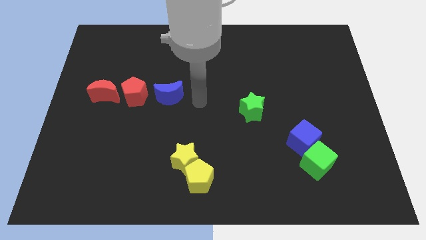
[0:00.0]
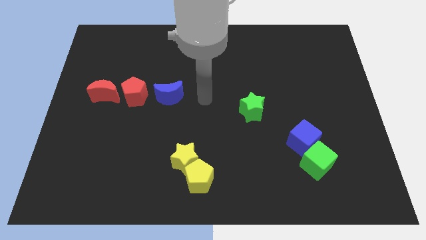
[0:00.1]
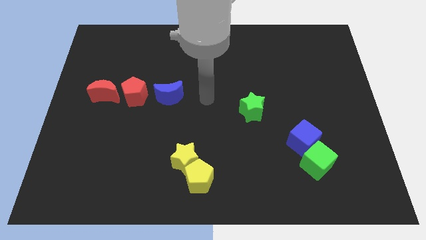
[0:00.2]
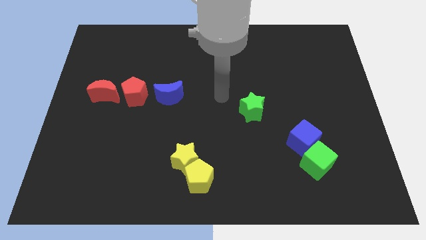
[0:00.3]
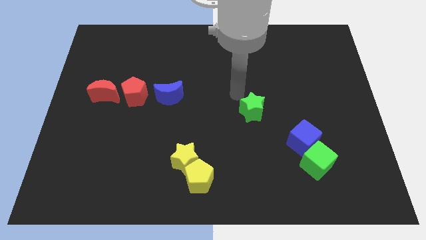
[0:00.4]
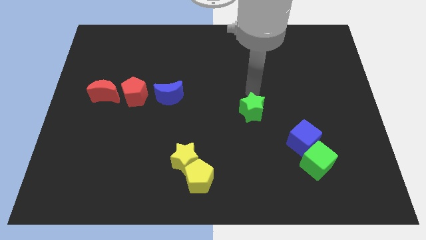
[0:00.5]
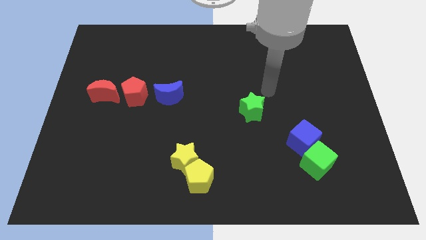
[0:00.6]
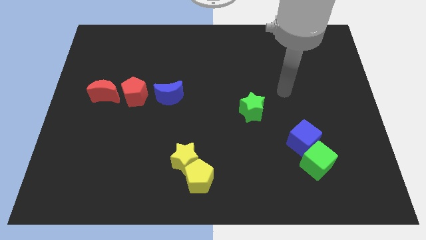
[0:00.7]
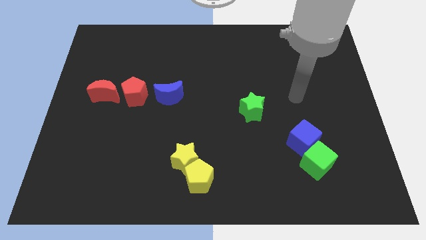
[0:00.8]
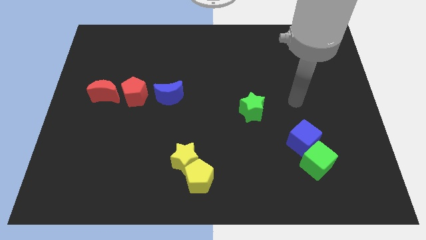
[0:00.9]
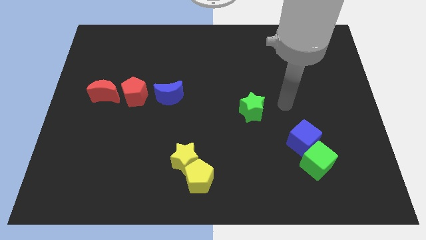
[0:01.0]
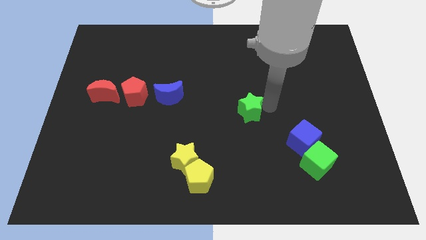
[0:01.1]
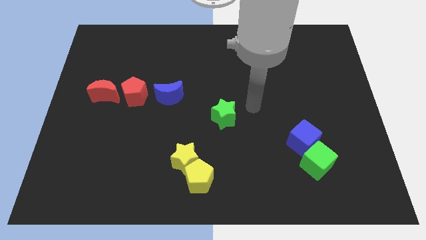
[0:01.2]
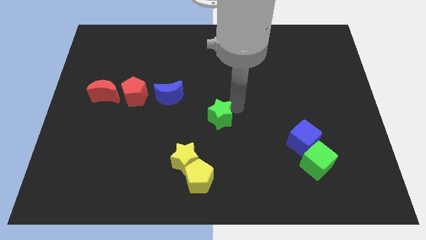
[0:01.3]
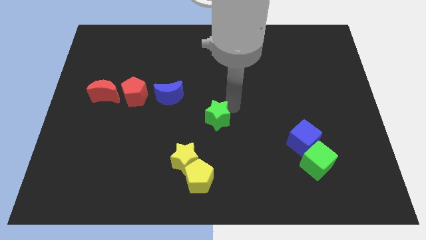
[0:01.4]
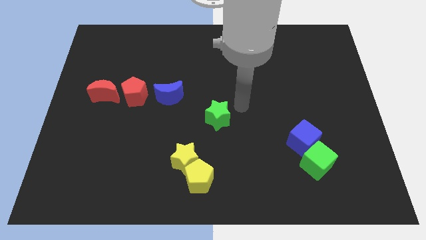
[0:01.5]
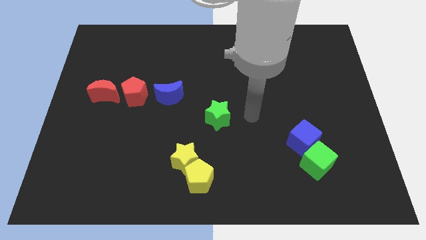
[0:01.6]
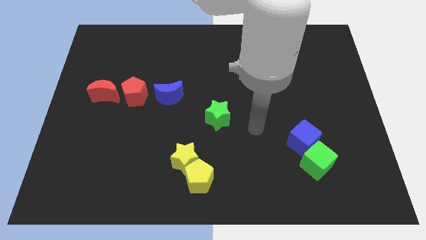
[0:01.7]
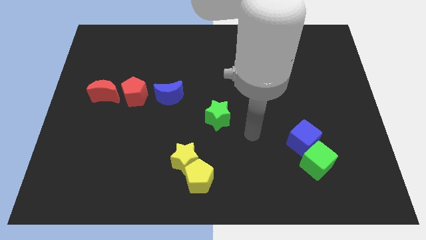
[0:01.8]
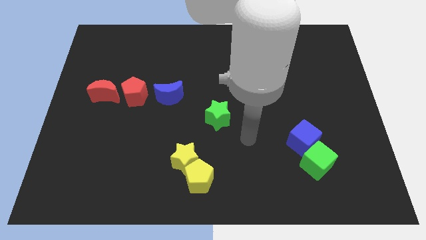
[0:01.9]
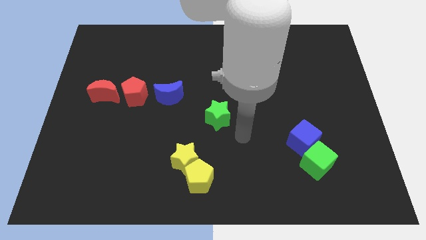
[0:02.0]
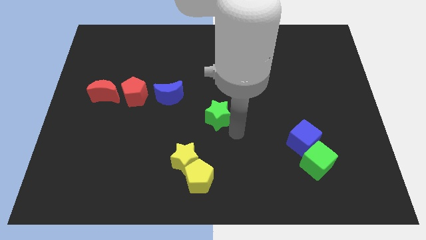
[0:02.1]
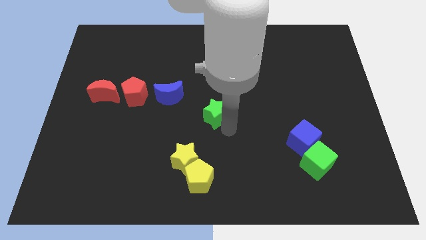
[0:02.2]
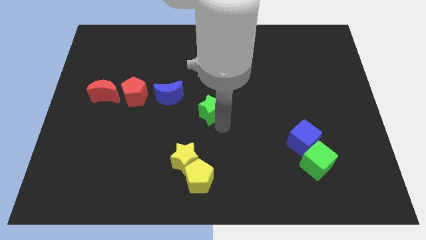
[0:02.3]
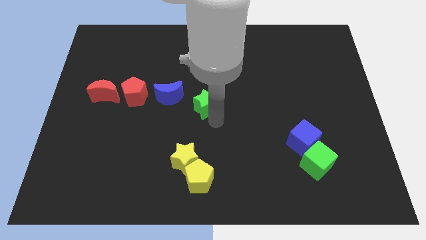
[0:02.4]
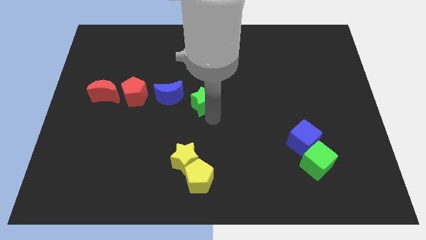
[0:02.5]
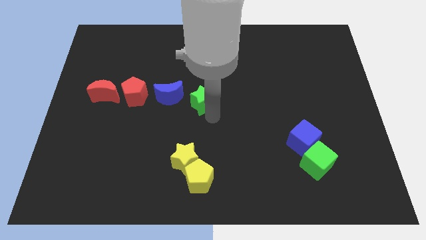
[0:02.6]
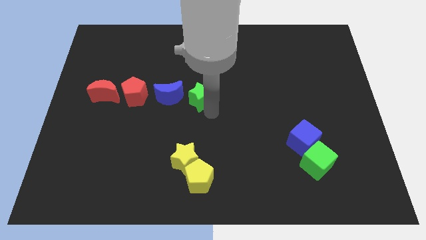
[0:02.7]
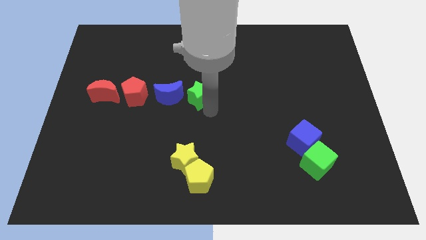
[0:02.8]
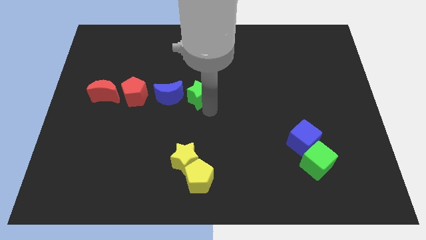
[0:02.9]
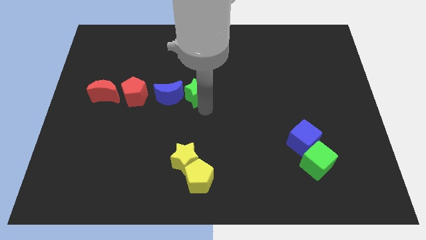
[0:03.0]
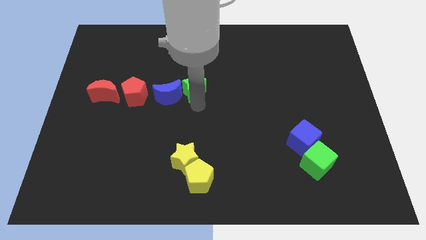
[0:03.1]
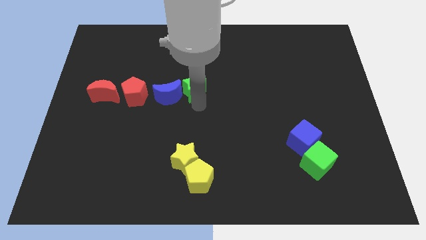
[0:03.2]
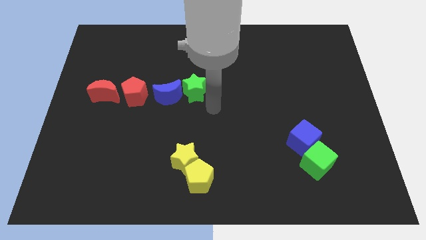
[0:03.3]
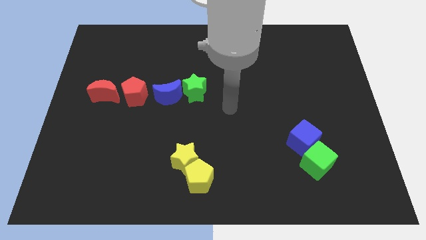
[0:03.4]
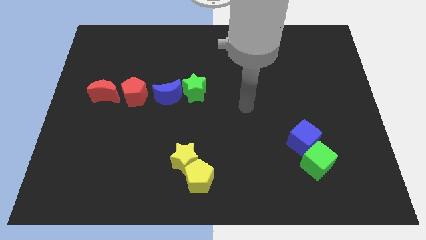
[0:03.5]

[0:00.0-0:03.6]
move green star to the right of the blue crescent

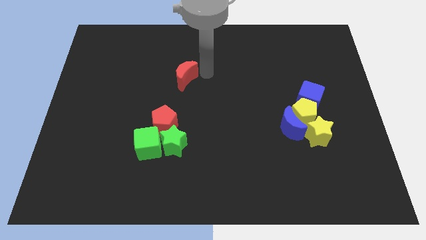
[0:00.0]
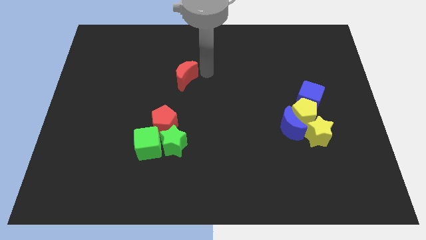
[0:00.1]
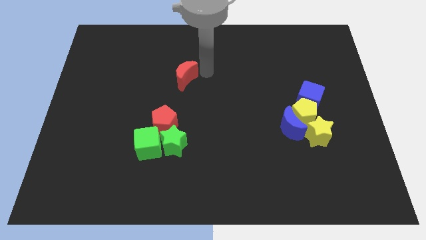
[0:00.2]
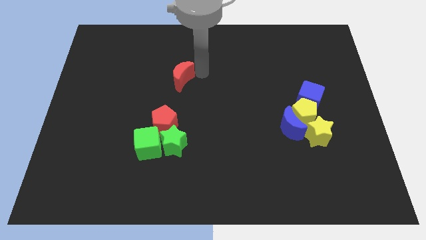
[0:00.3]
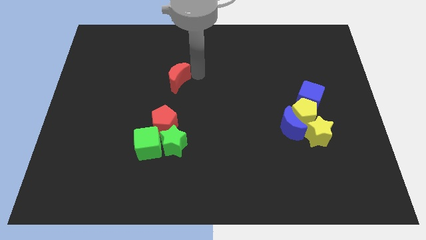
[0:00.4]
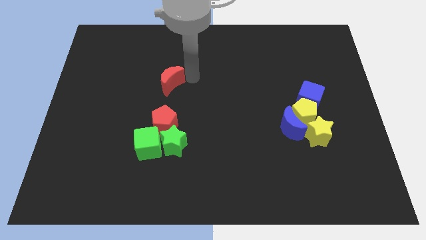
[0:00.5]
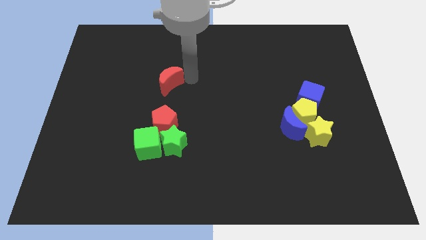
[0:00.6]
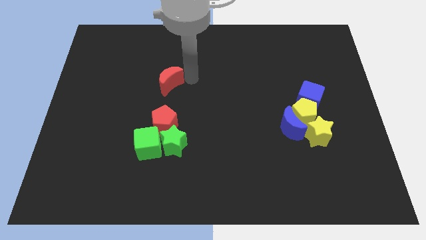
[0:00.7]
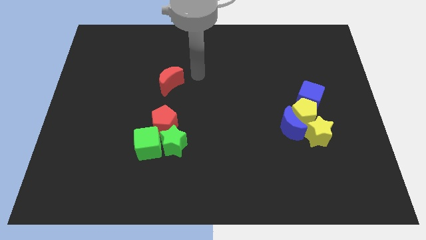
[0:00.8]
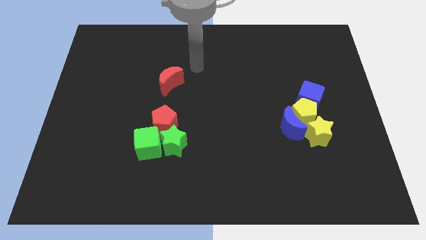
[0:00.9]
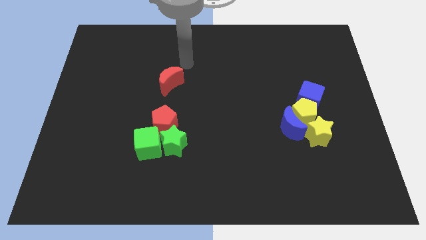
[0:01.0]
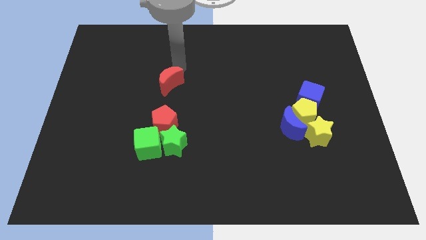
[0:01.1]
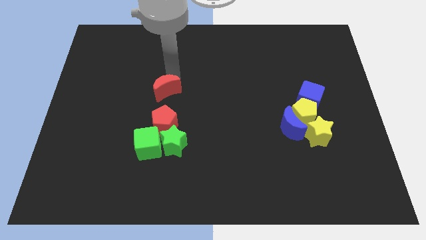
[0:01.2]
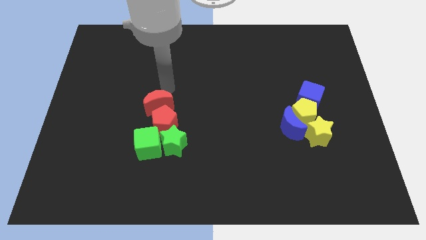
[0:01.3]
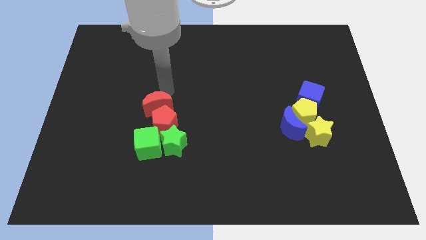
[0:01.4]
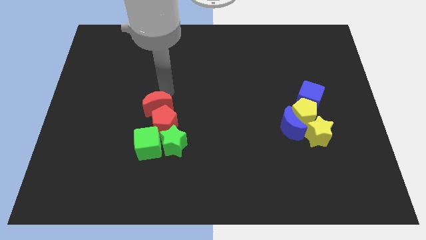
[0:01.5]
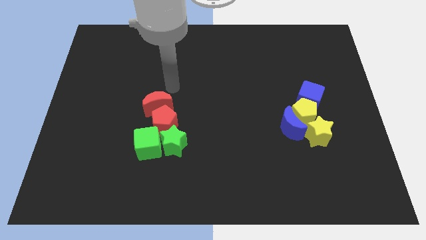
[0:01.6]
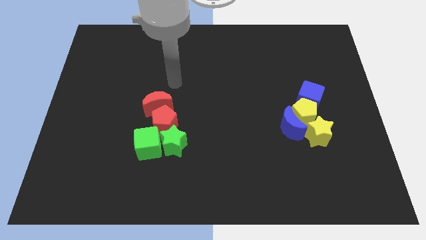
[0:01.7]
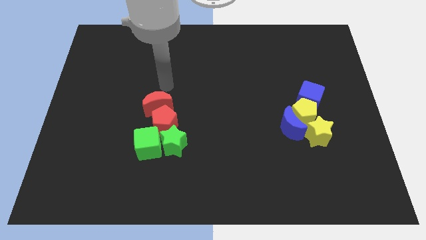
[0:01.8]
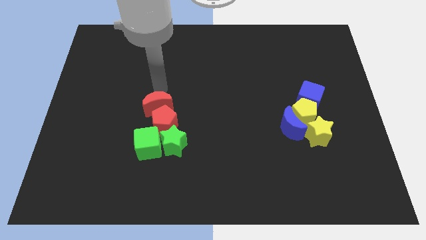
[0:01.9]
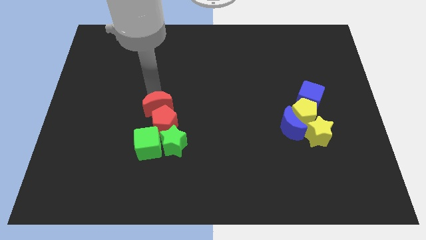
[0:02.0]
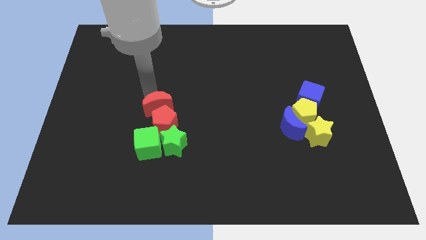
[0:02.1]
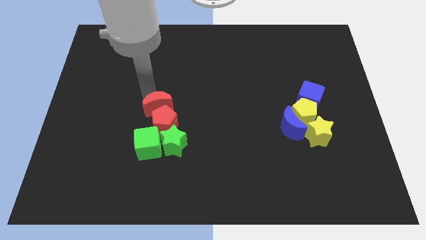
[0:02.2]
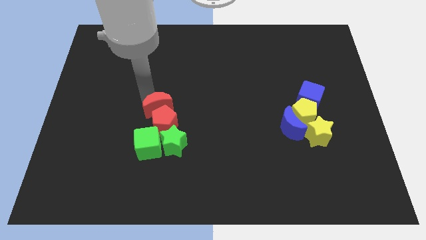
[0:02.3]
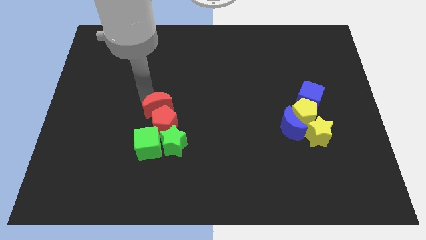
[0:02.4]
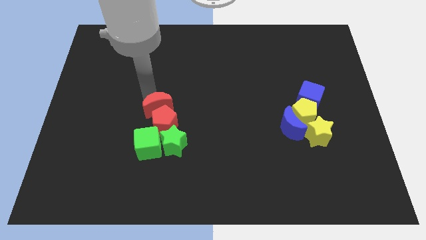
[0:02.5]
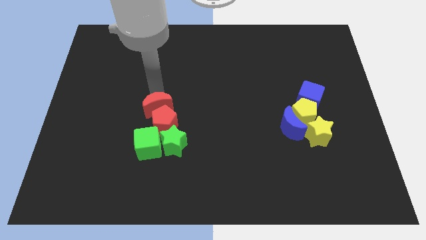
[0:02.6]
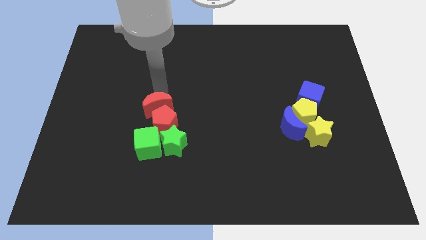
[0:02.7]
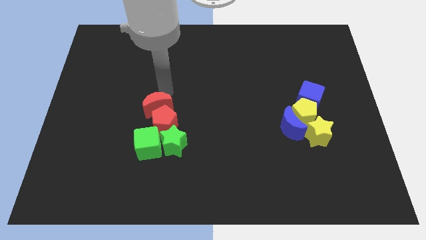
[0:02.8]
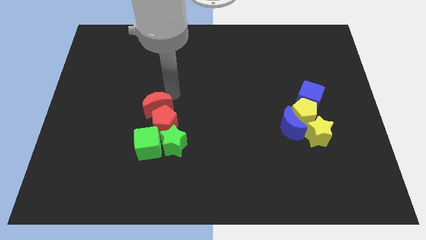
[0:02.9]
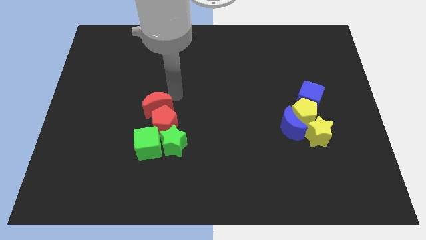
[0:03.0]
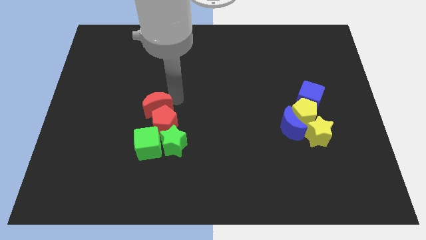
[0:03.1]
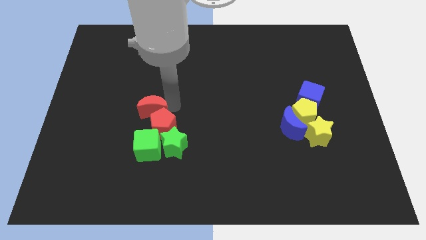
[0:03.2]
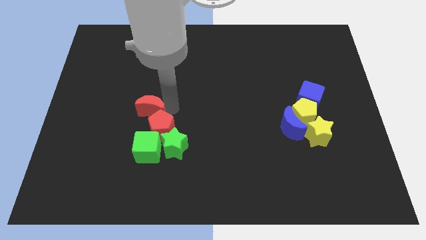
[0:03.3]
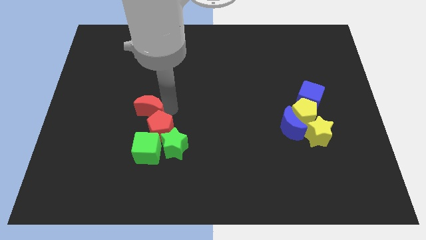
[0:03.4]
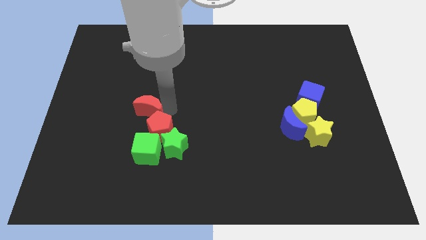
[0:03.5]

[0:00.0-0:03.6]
push the red moon into the red pentagon

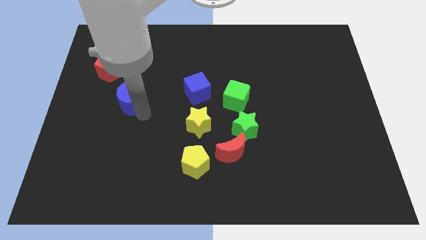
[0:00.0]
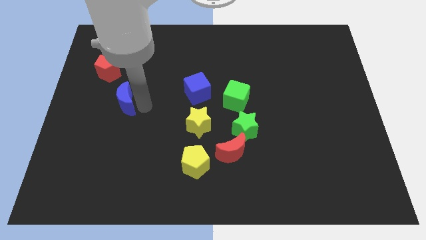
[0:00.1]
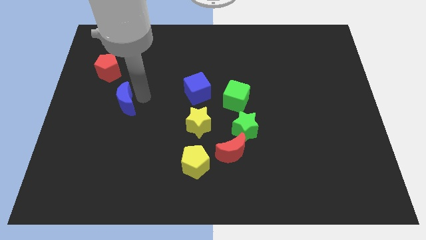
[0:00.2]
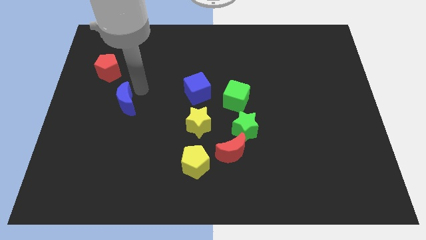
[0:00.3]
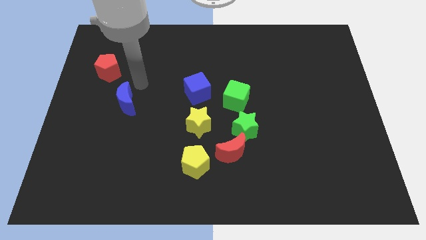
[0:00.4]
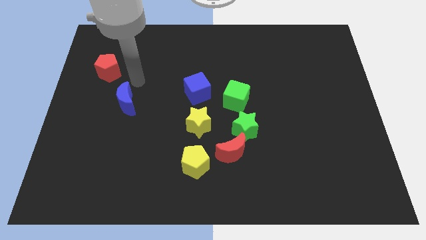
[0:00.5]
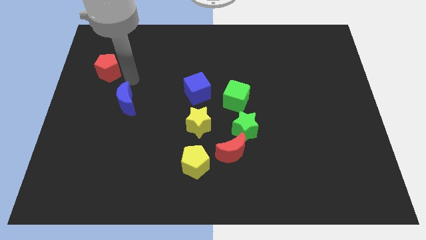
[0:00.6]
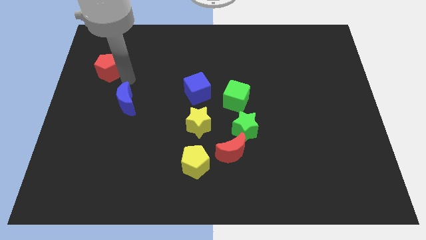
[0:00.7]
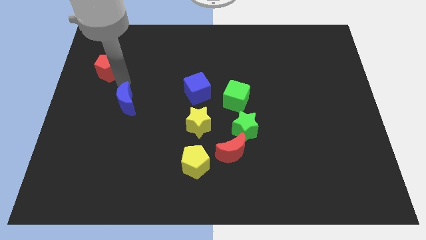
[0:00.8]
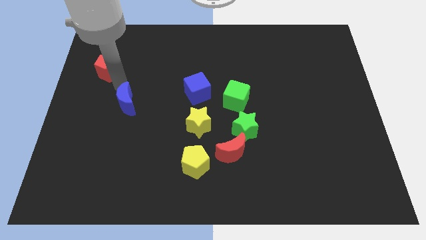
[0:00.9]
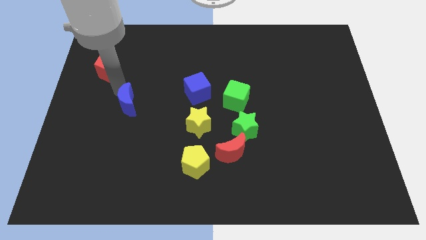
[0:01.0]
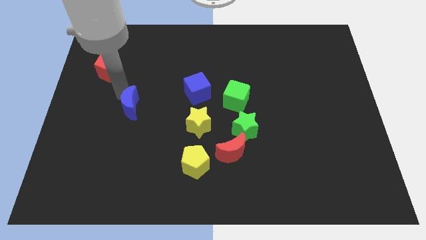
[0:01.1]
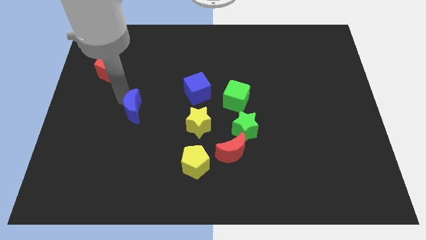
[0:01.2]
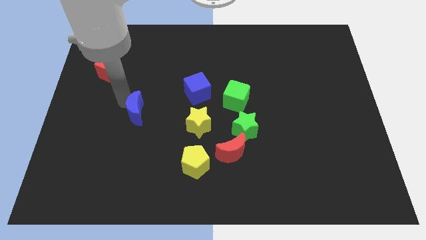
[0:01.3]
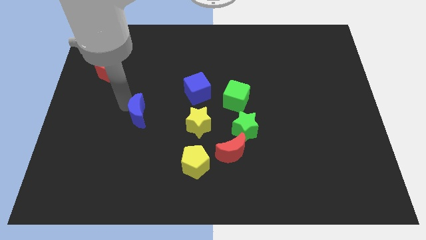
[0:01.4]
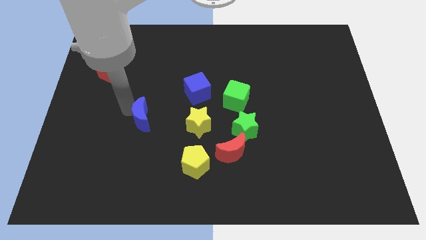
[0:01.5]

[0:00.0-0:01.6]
move blue moon to the left of yellow star

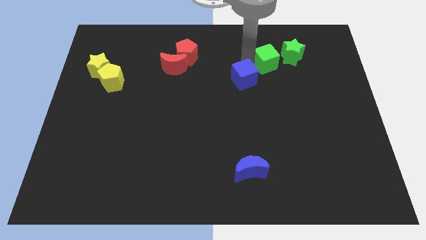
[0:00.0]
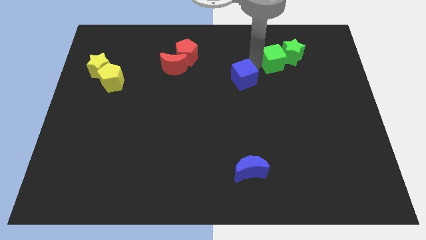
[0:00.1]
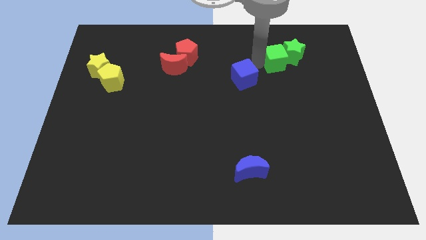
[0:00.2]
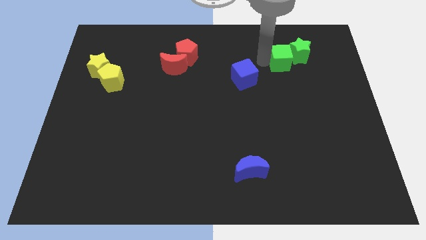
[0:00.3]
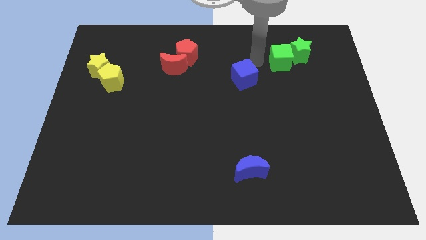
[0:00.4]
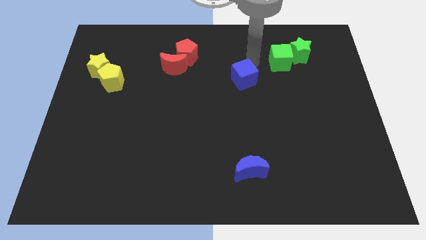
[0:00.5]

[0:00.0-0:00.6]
move the green cube on the left side of the green star
